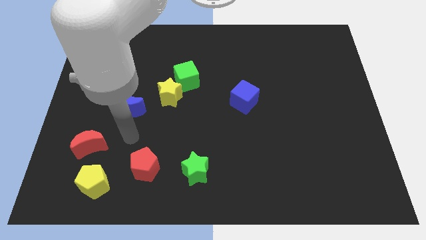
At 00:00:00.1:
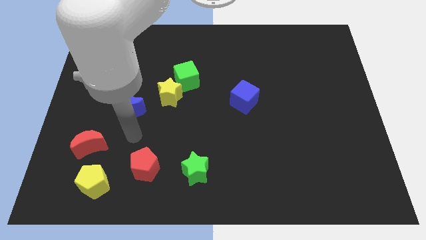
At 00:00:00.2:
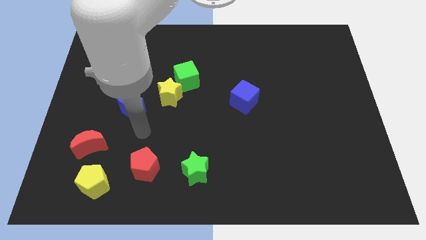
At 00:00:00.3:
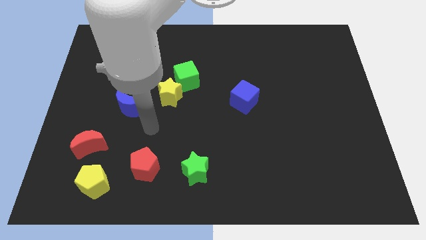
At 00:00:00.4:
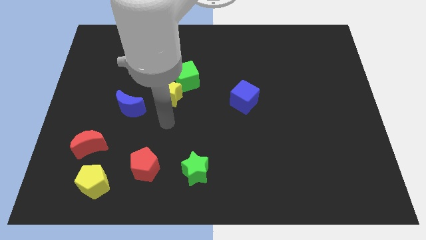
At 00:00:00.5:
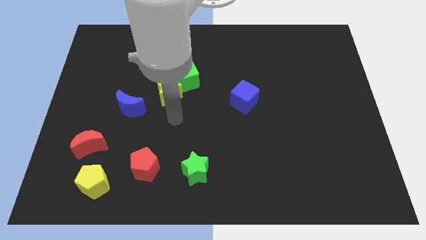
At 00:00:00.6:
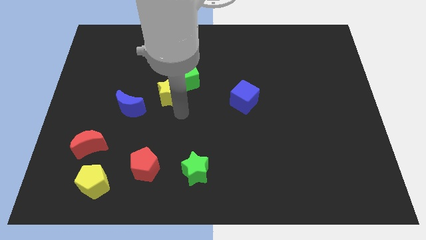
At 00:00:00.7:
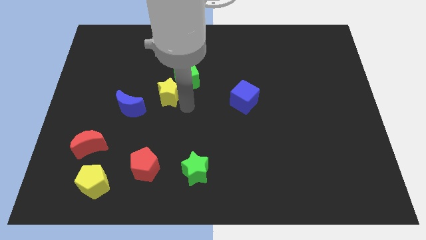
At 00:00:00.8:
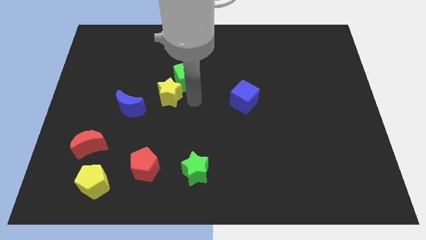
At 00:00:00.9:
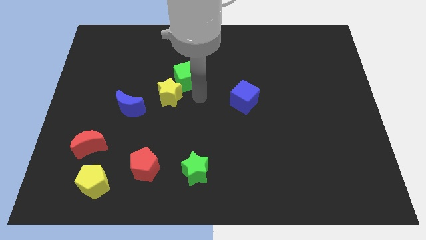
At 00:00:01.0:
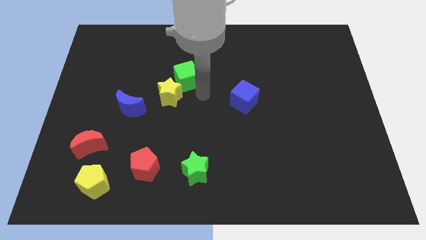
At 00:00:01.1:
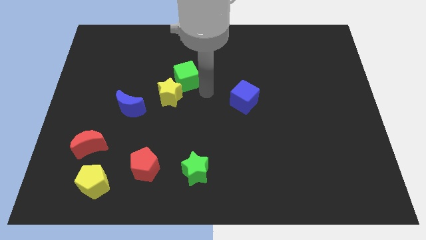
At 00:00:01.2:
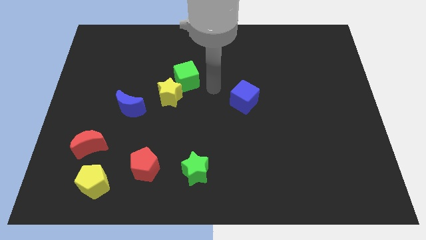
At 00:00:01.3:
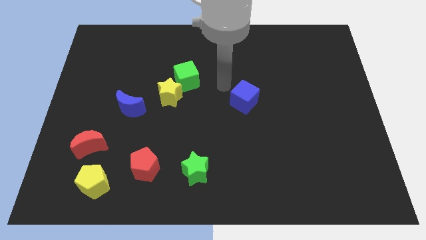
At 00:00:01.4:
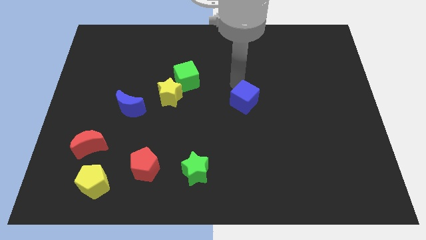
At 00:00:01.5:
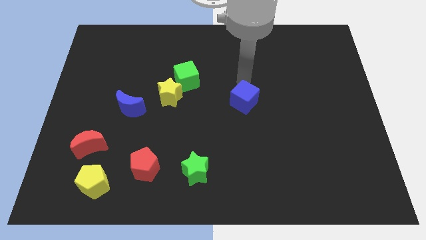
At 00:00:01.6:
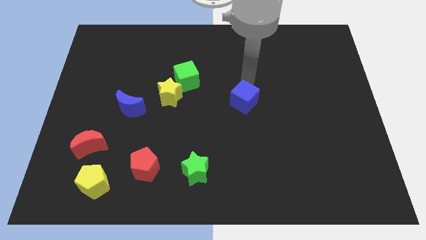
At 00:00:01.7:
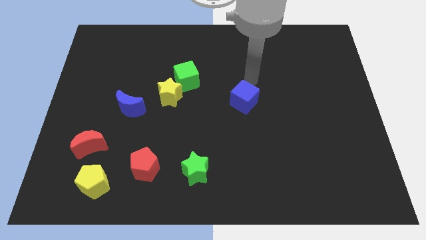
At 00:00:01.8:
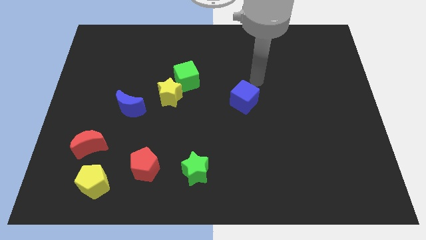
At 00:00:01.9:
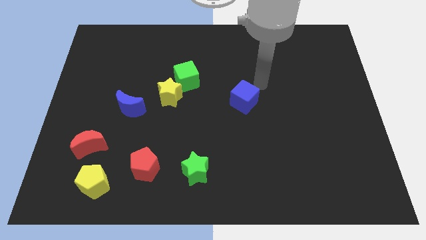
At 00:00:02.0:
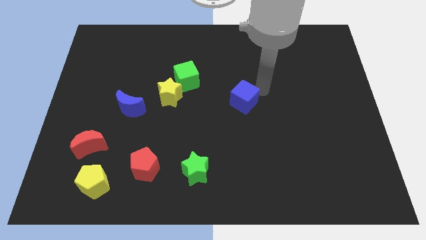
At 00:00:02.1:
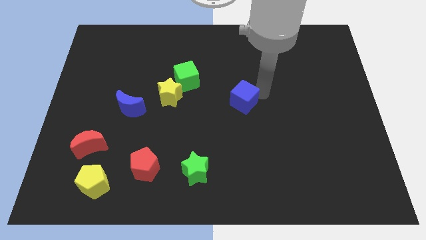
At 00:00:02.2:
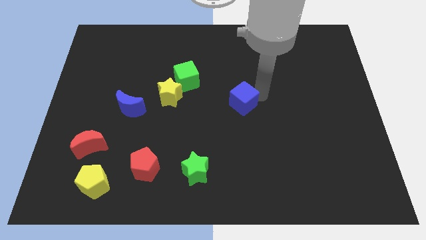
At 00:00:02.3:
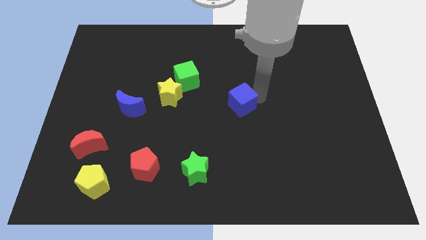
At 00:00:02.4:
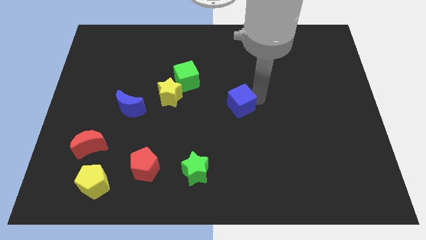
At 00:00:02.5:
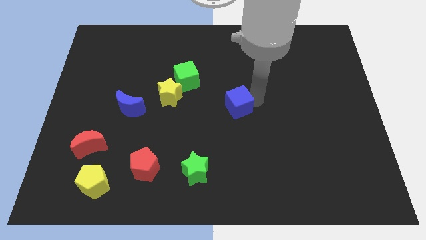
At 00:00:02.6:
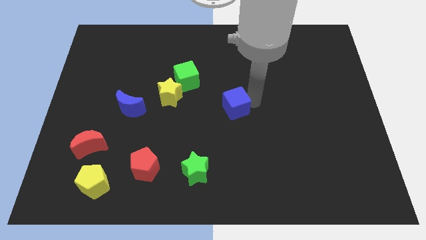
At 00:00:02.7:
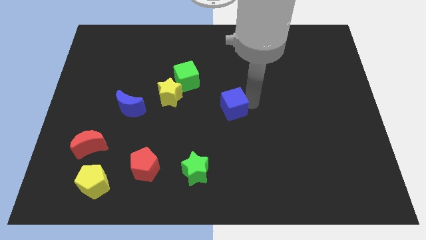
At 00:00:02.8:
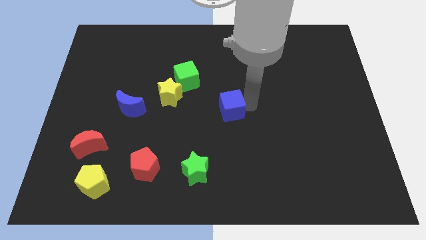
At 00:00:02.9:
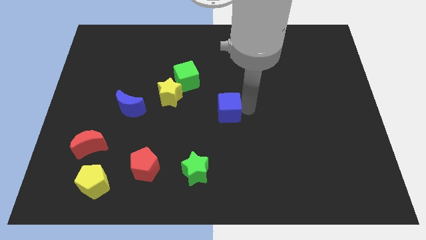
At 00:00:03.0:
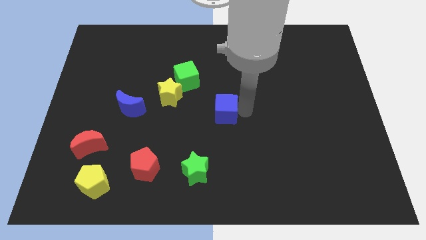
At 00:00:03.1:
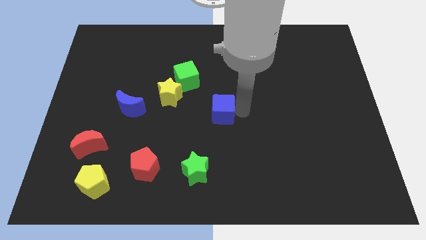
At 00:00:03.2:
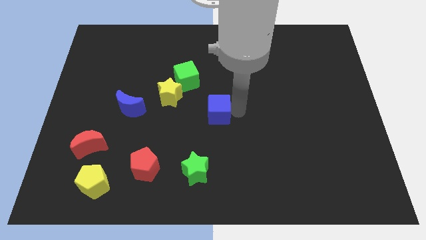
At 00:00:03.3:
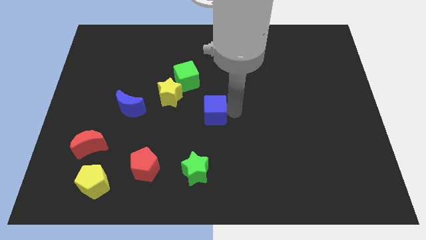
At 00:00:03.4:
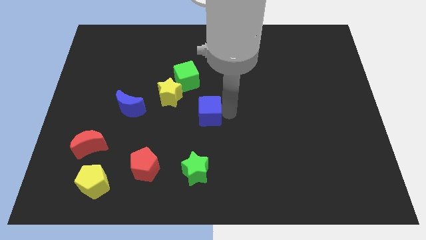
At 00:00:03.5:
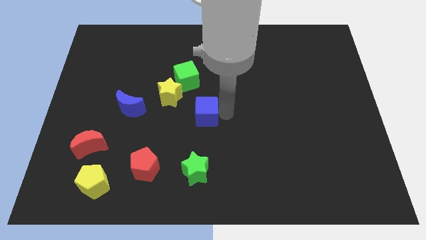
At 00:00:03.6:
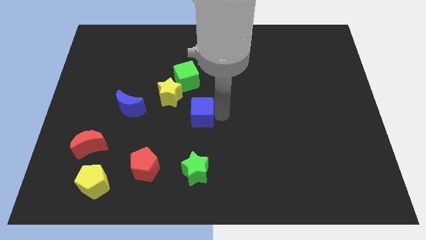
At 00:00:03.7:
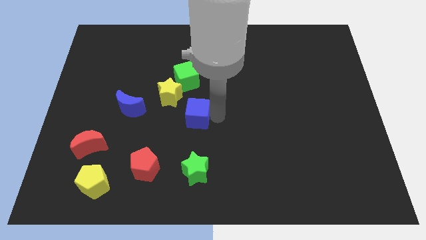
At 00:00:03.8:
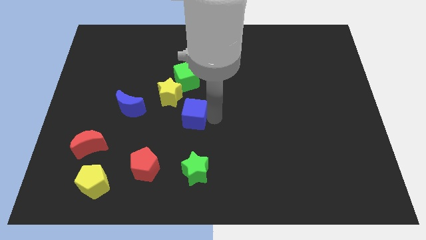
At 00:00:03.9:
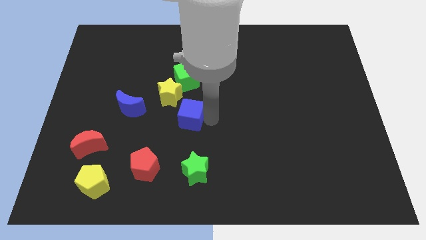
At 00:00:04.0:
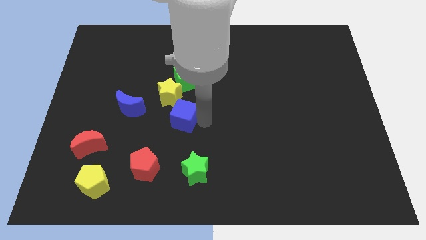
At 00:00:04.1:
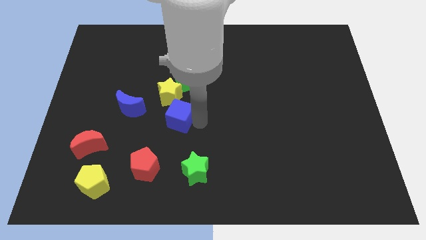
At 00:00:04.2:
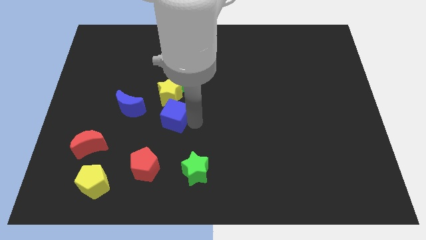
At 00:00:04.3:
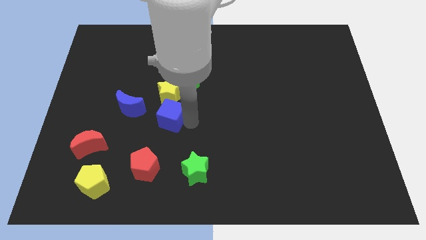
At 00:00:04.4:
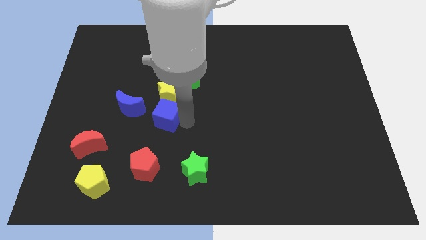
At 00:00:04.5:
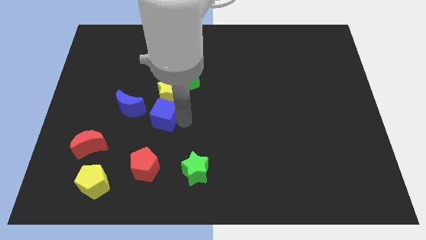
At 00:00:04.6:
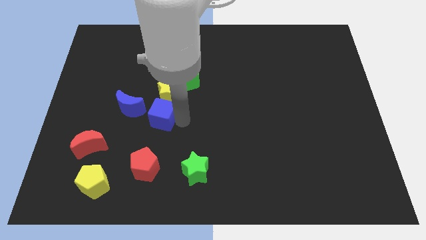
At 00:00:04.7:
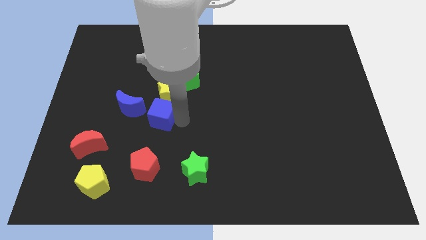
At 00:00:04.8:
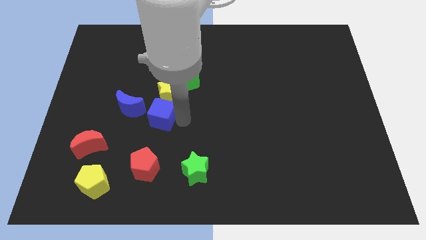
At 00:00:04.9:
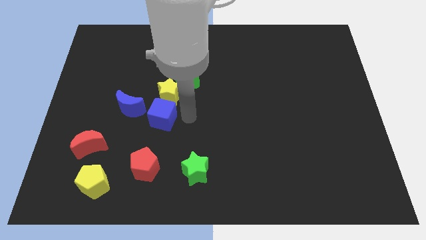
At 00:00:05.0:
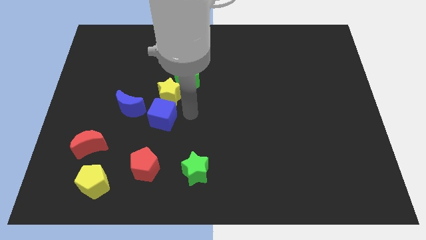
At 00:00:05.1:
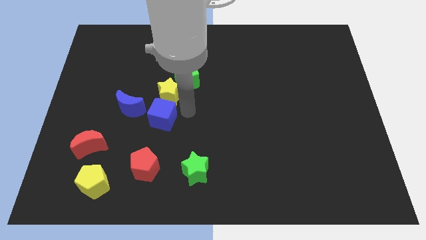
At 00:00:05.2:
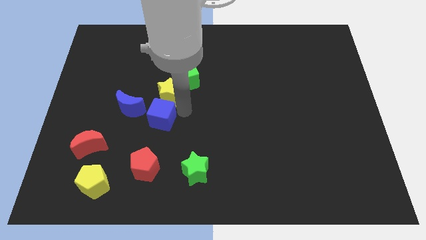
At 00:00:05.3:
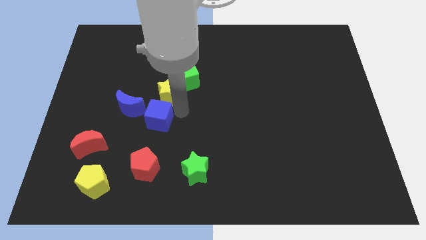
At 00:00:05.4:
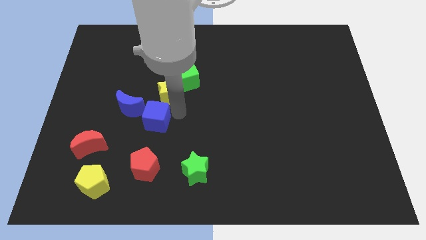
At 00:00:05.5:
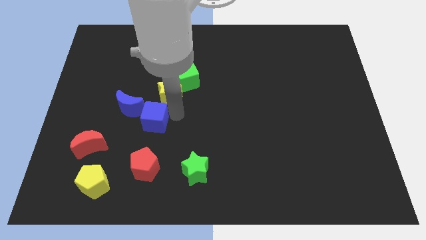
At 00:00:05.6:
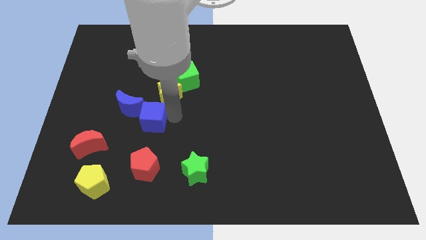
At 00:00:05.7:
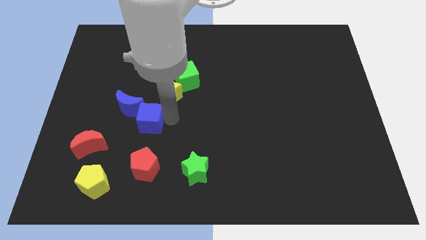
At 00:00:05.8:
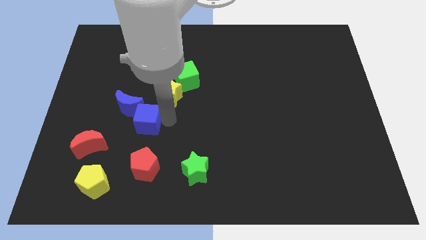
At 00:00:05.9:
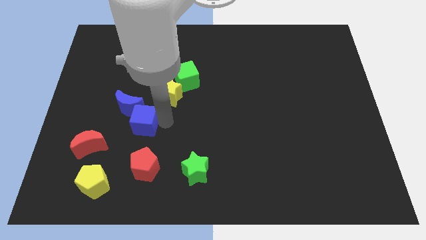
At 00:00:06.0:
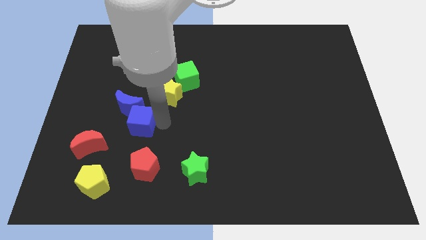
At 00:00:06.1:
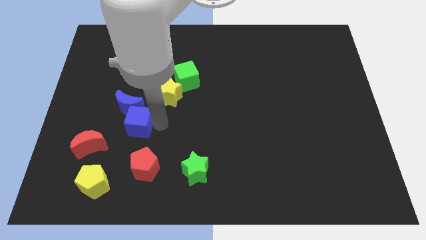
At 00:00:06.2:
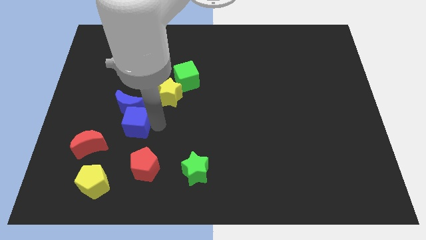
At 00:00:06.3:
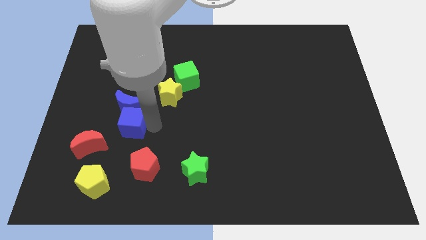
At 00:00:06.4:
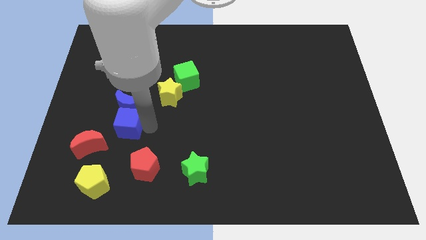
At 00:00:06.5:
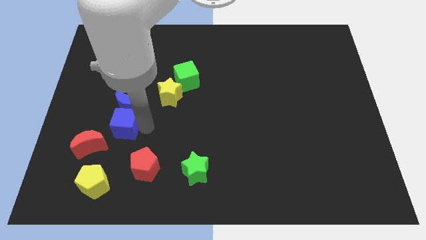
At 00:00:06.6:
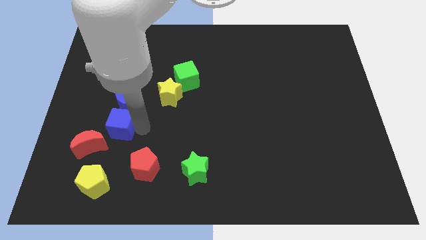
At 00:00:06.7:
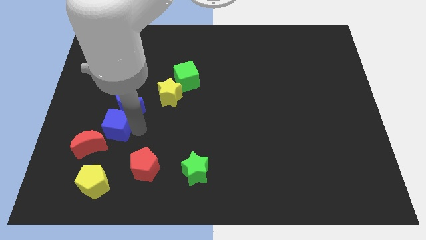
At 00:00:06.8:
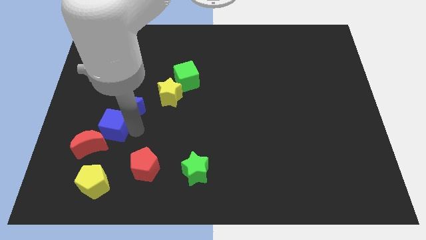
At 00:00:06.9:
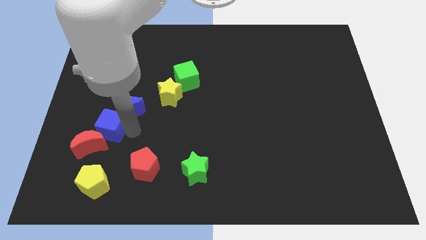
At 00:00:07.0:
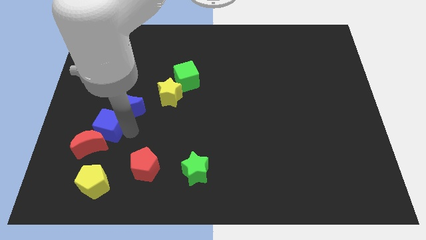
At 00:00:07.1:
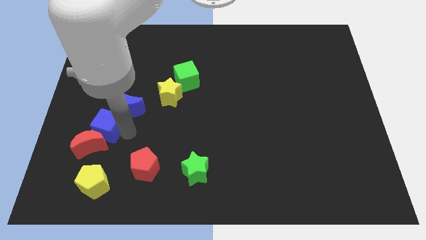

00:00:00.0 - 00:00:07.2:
put the blue cube towards the red moon

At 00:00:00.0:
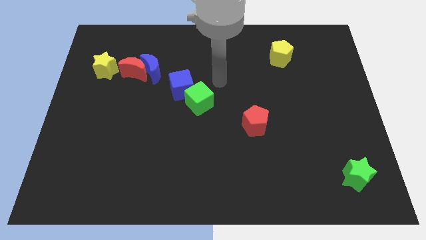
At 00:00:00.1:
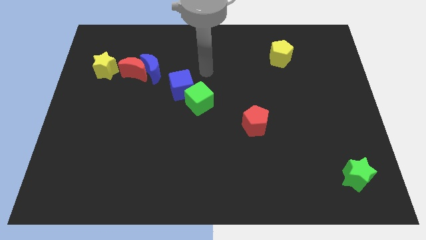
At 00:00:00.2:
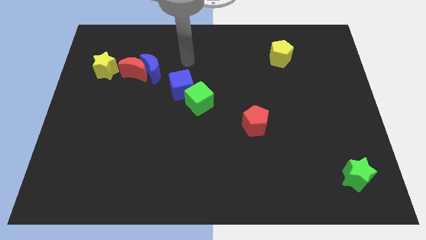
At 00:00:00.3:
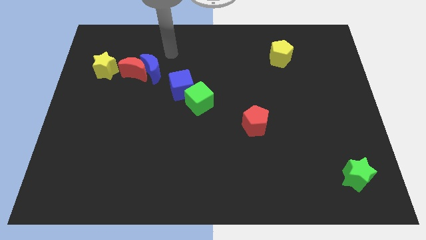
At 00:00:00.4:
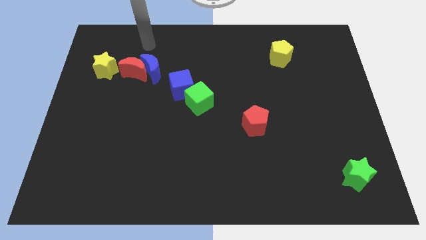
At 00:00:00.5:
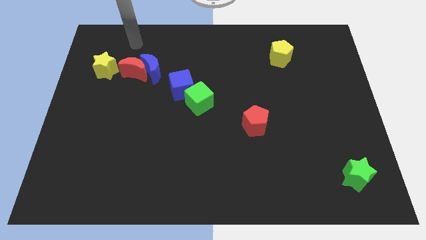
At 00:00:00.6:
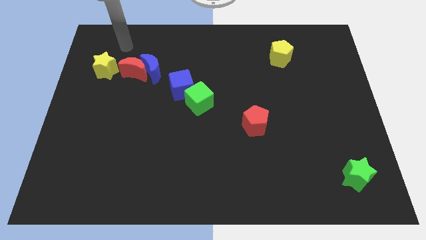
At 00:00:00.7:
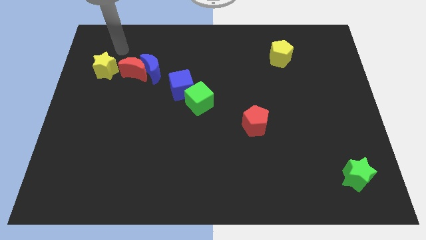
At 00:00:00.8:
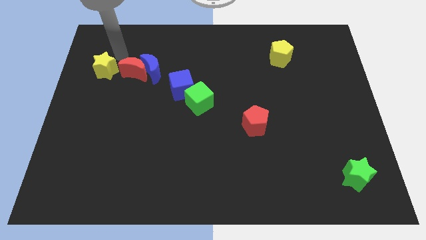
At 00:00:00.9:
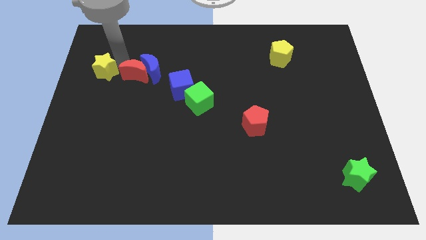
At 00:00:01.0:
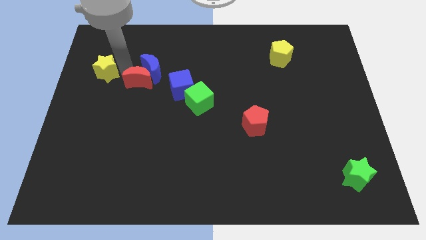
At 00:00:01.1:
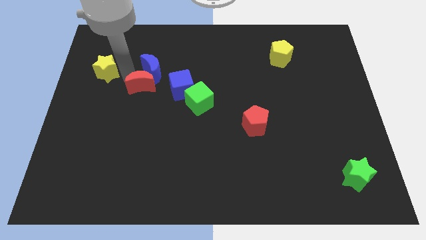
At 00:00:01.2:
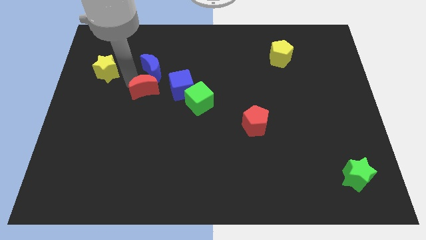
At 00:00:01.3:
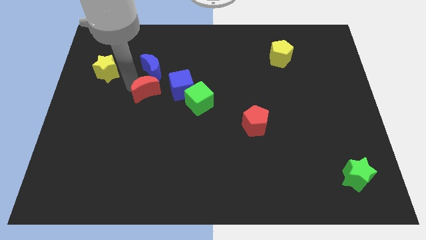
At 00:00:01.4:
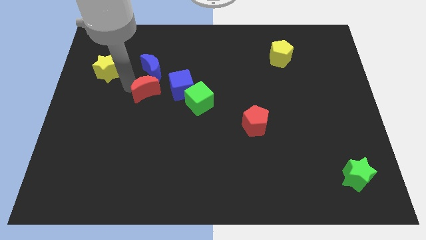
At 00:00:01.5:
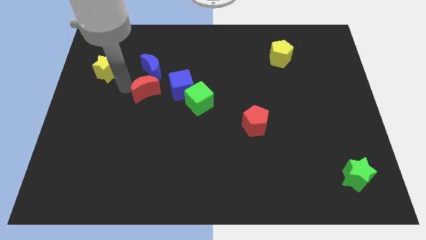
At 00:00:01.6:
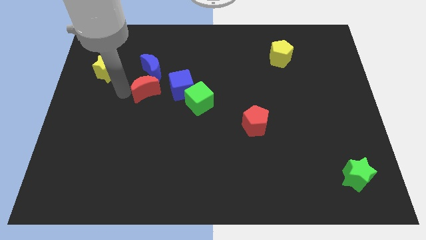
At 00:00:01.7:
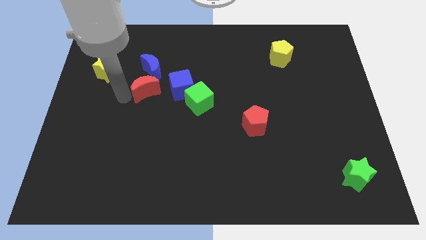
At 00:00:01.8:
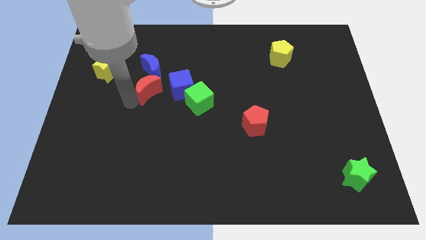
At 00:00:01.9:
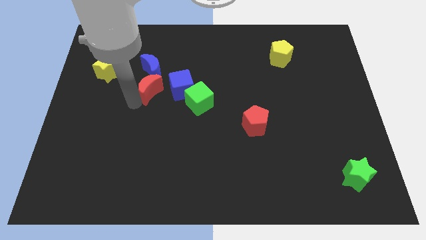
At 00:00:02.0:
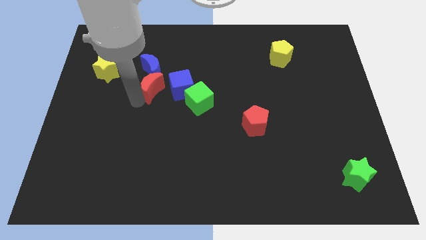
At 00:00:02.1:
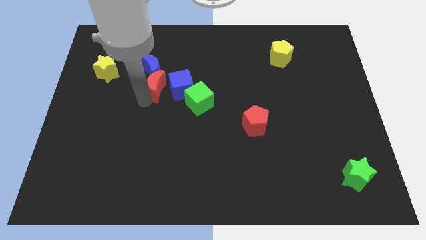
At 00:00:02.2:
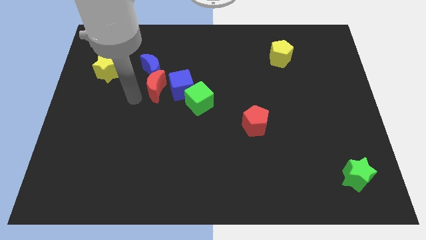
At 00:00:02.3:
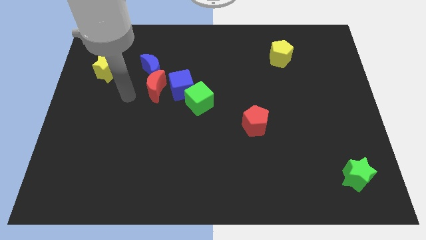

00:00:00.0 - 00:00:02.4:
move the red moon close to the blue cube
